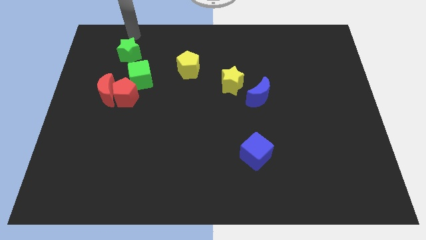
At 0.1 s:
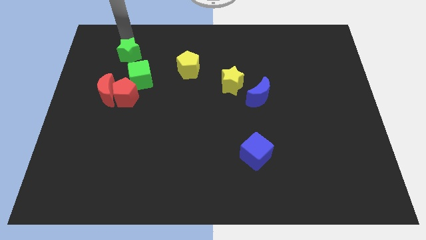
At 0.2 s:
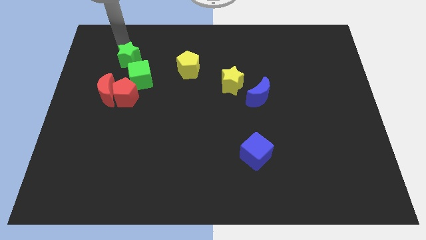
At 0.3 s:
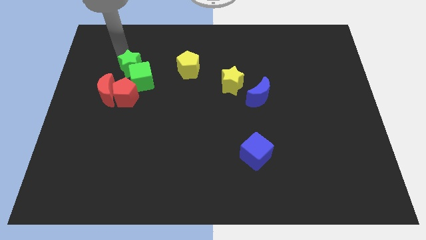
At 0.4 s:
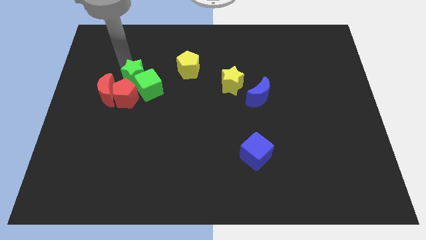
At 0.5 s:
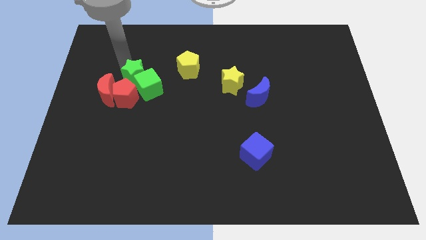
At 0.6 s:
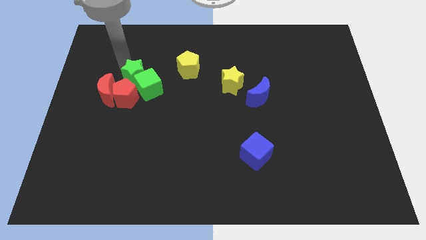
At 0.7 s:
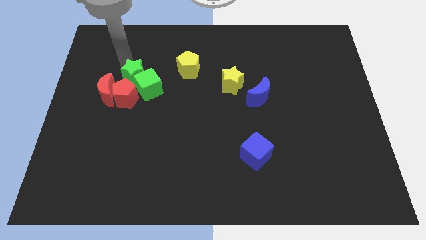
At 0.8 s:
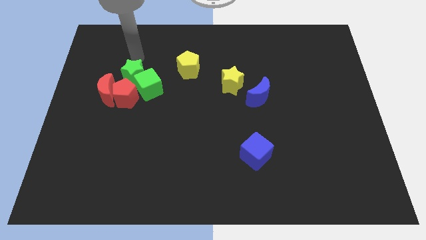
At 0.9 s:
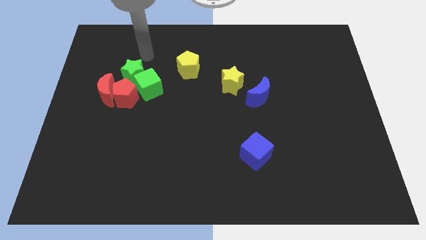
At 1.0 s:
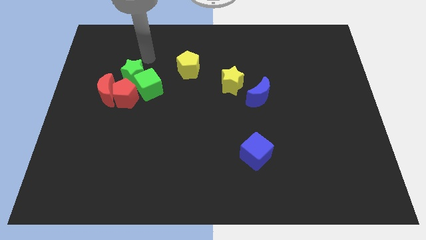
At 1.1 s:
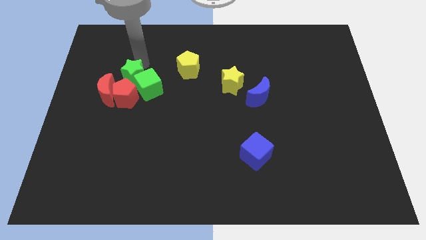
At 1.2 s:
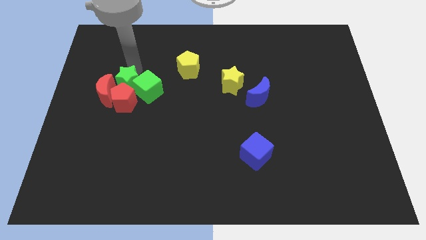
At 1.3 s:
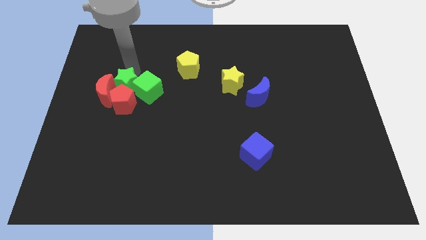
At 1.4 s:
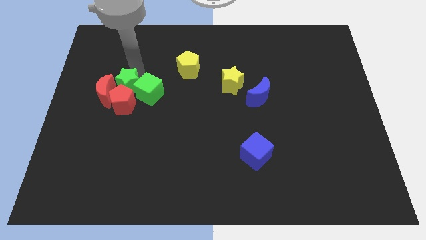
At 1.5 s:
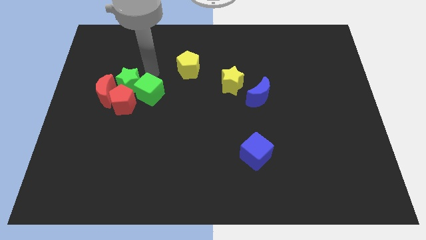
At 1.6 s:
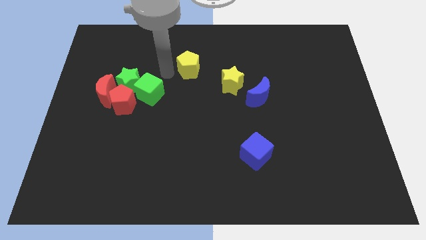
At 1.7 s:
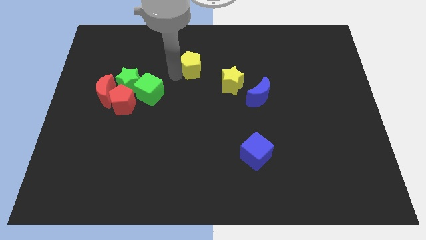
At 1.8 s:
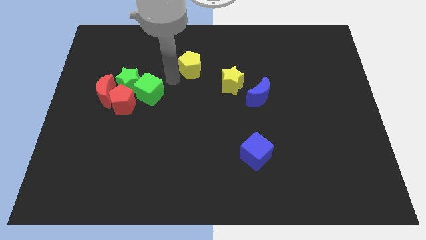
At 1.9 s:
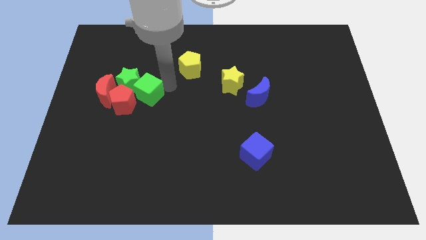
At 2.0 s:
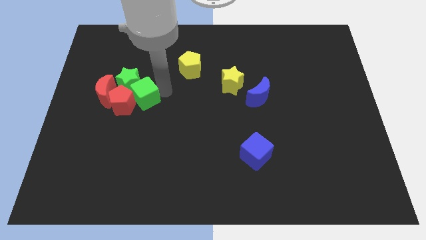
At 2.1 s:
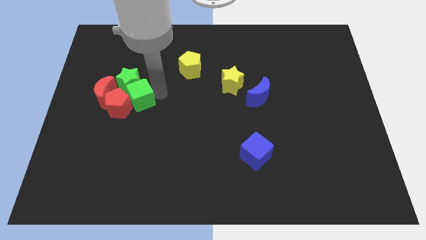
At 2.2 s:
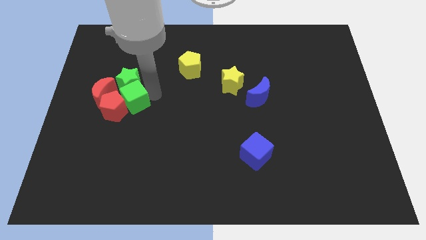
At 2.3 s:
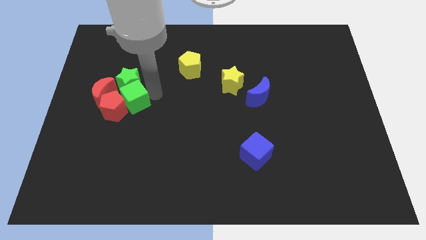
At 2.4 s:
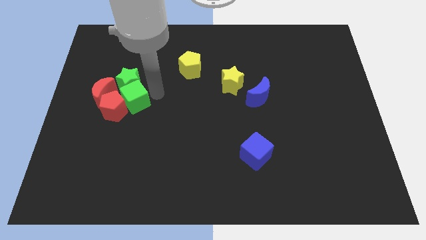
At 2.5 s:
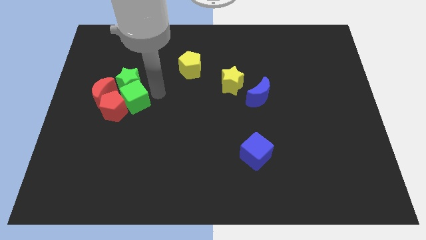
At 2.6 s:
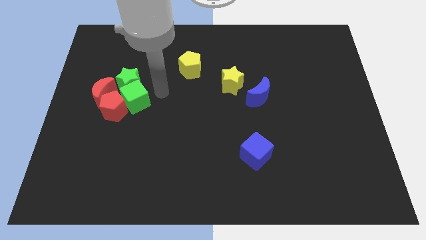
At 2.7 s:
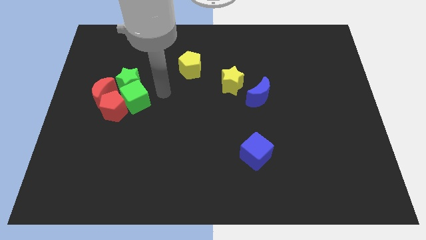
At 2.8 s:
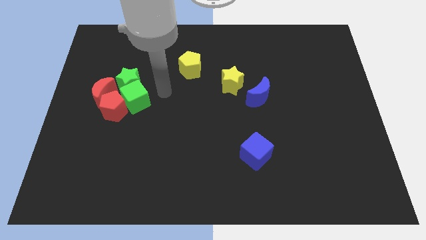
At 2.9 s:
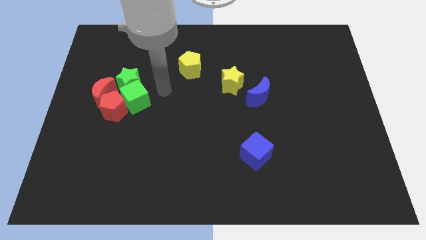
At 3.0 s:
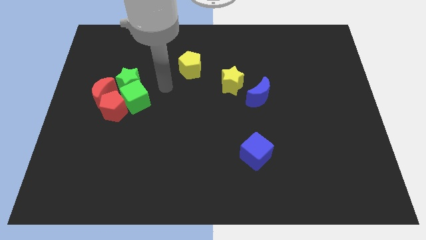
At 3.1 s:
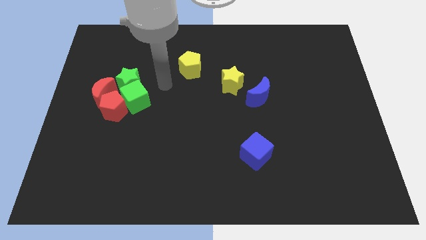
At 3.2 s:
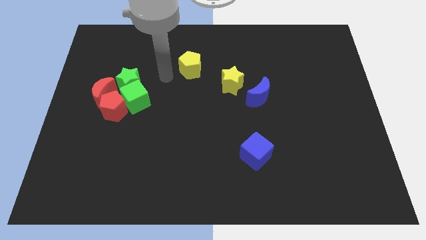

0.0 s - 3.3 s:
make green and red blocks together

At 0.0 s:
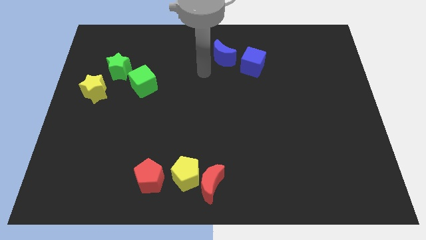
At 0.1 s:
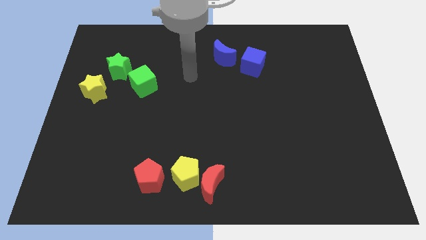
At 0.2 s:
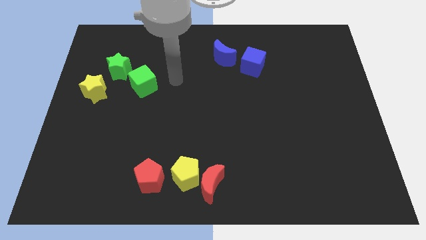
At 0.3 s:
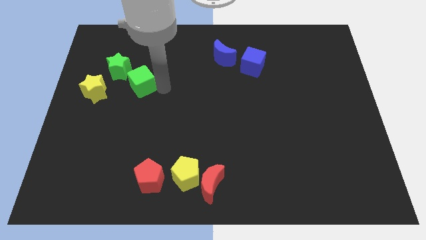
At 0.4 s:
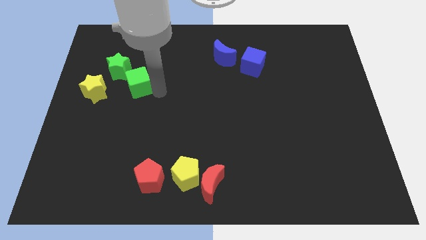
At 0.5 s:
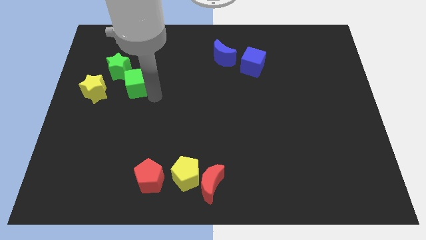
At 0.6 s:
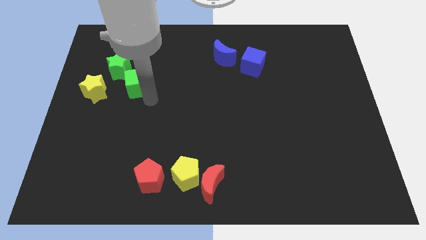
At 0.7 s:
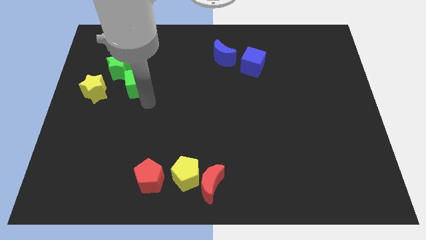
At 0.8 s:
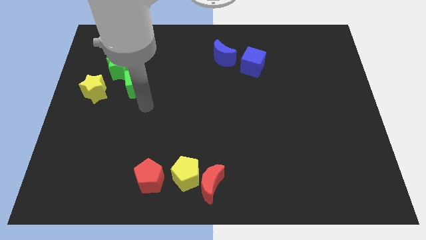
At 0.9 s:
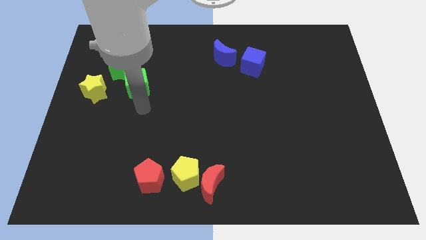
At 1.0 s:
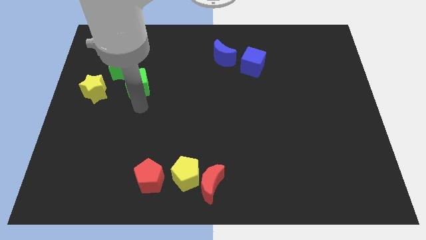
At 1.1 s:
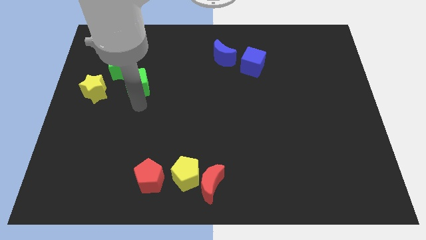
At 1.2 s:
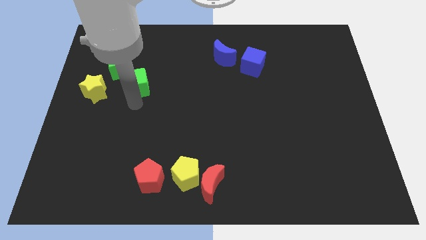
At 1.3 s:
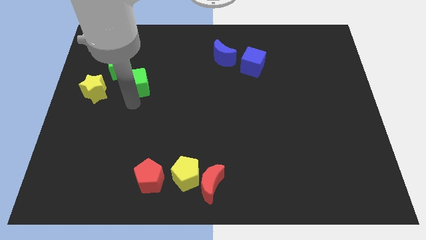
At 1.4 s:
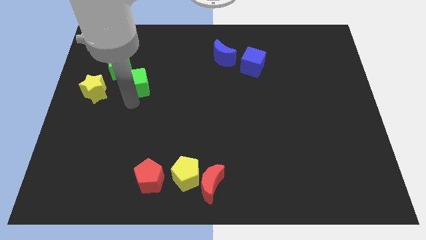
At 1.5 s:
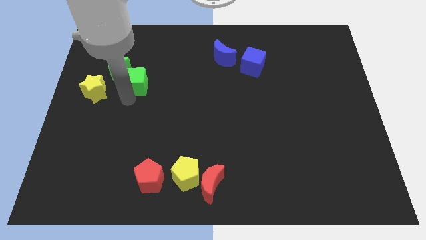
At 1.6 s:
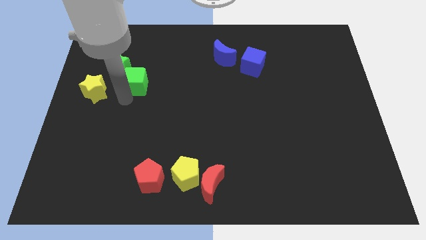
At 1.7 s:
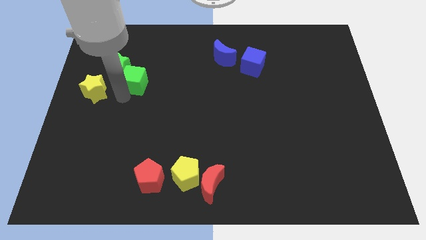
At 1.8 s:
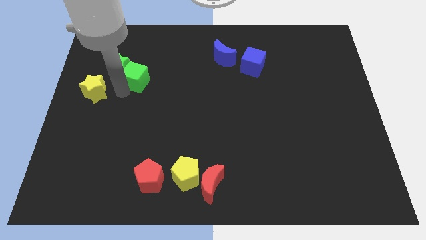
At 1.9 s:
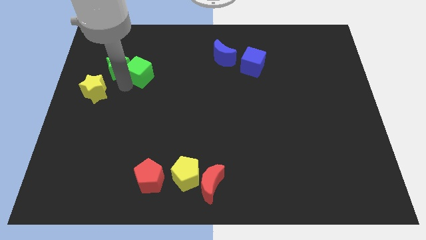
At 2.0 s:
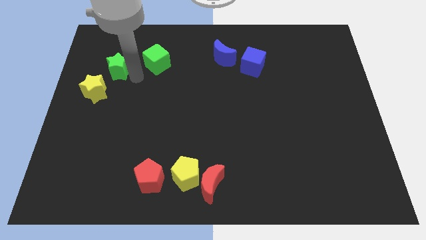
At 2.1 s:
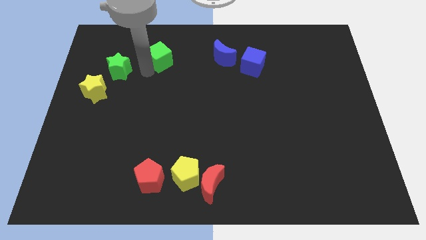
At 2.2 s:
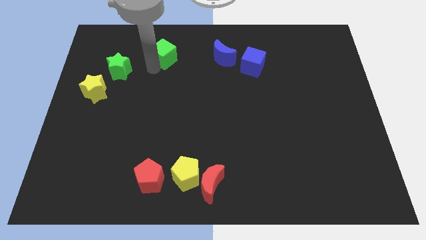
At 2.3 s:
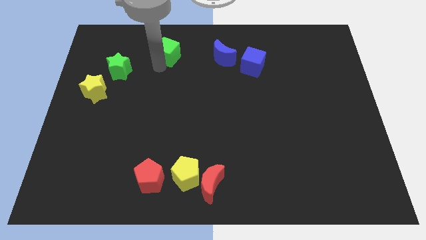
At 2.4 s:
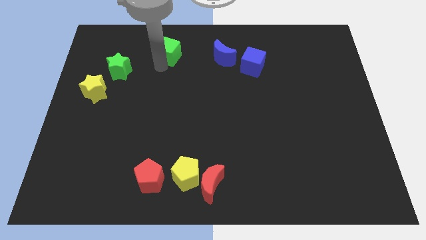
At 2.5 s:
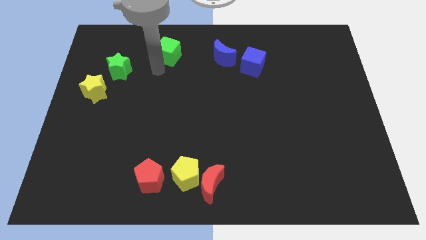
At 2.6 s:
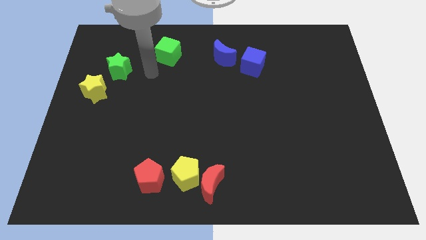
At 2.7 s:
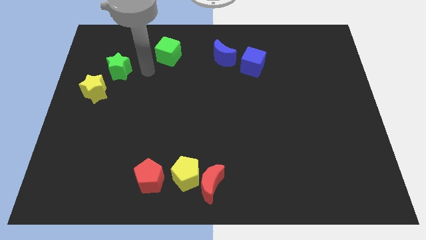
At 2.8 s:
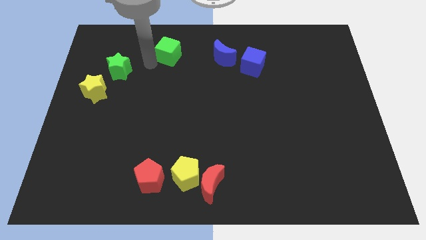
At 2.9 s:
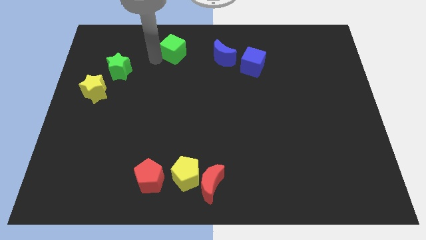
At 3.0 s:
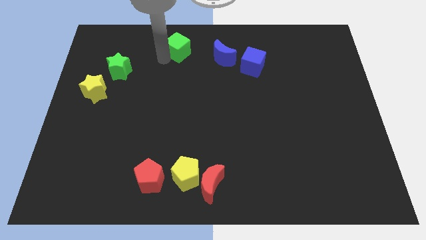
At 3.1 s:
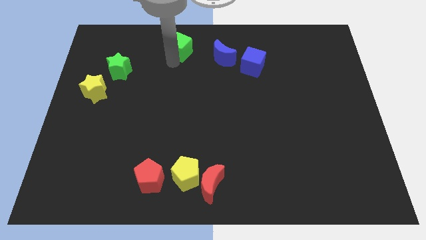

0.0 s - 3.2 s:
move the green cube diagonally left of the blue crescent

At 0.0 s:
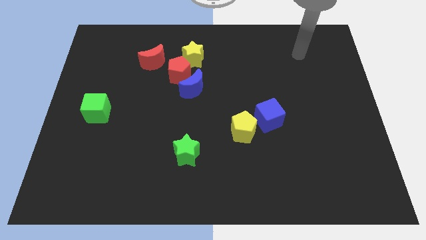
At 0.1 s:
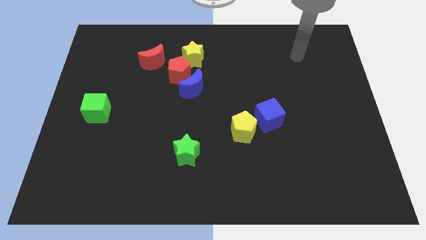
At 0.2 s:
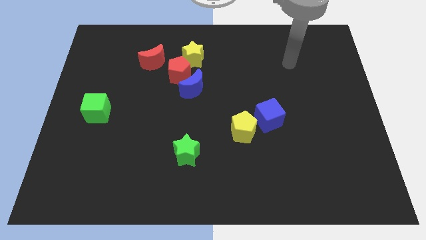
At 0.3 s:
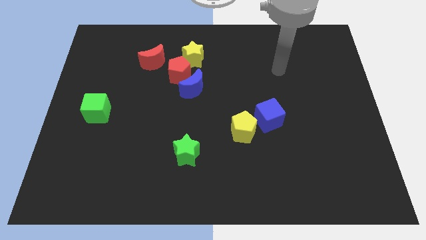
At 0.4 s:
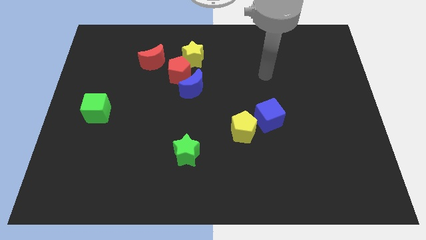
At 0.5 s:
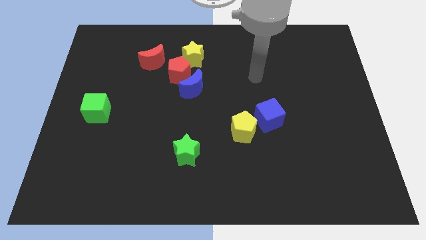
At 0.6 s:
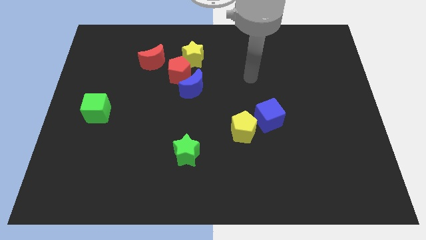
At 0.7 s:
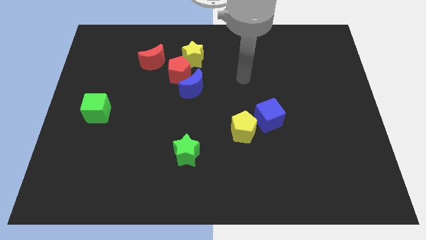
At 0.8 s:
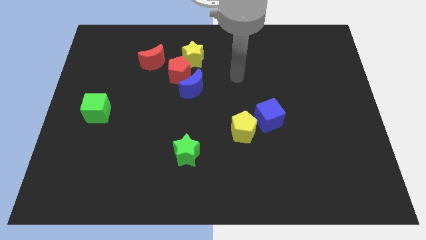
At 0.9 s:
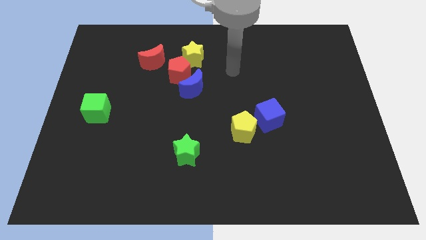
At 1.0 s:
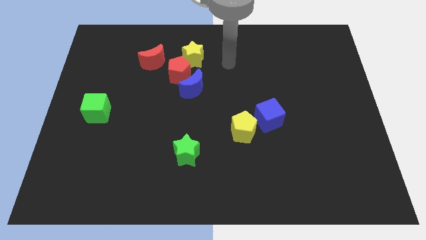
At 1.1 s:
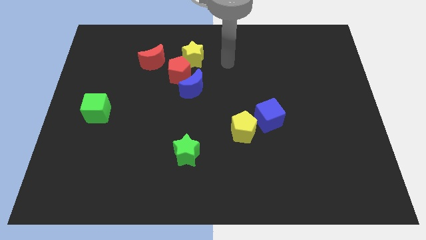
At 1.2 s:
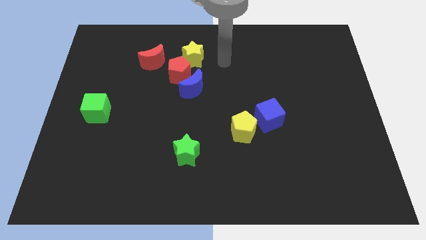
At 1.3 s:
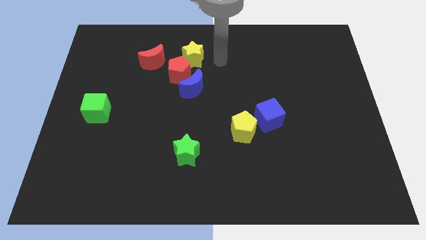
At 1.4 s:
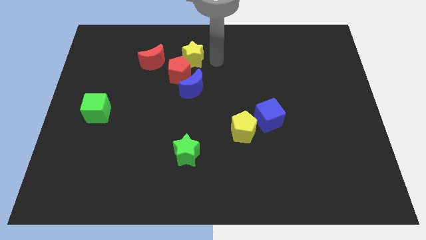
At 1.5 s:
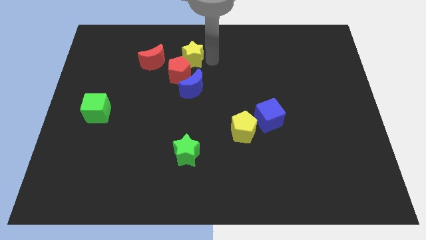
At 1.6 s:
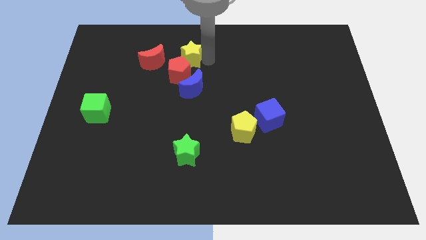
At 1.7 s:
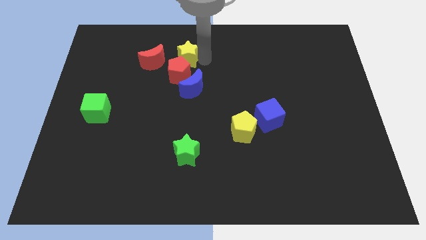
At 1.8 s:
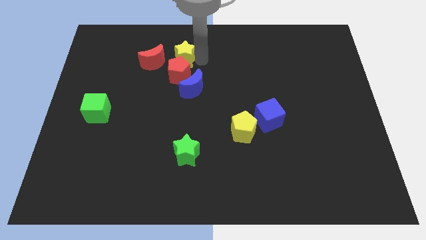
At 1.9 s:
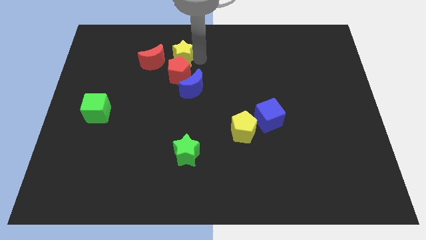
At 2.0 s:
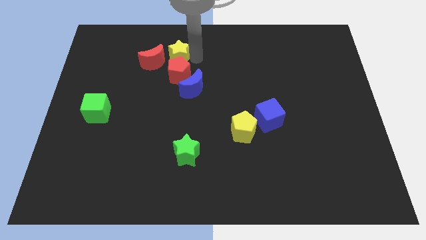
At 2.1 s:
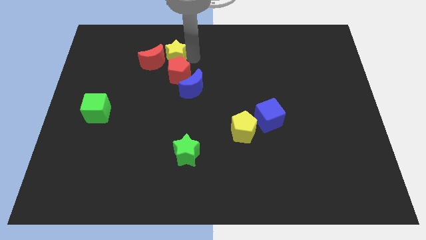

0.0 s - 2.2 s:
touch the yellow star with your arm

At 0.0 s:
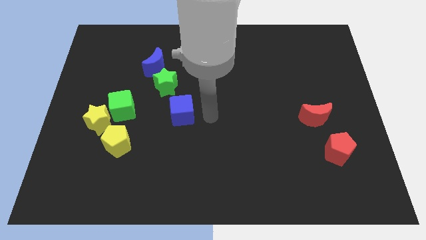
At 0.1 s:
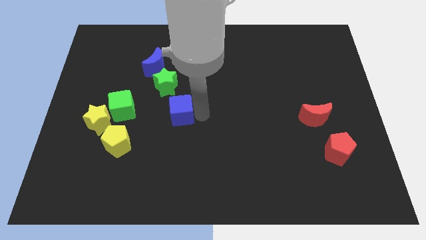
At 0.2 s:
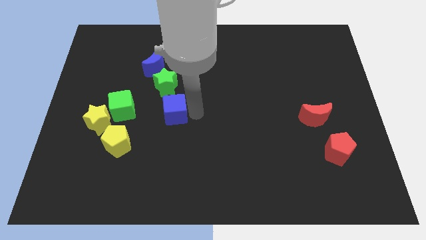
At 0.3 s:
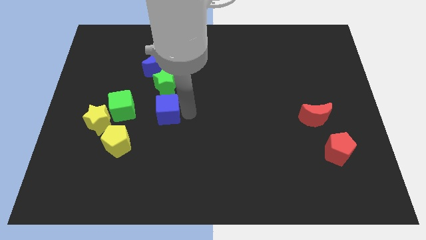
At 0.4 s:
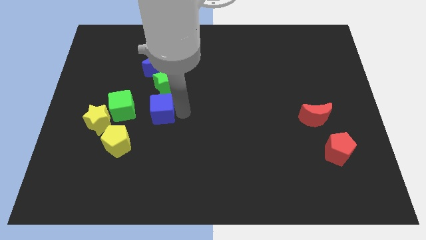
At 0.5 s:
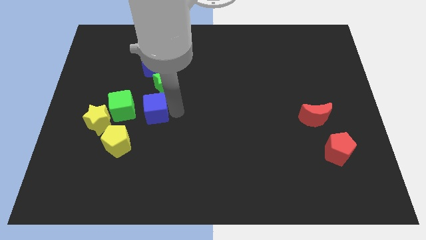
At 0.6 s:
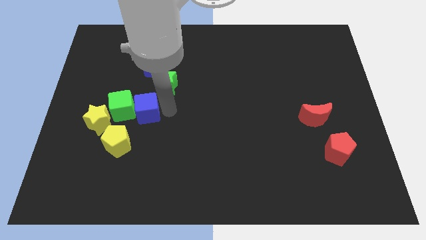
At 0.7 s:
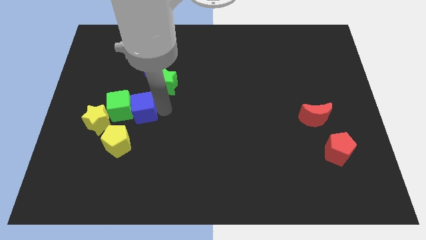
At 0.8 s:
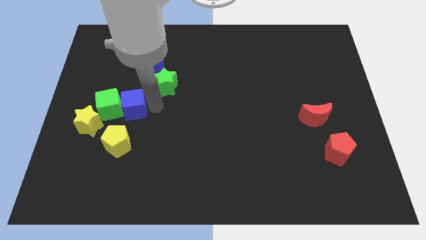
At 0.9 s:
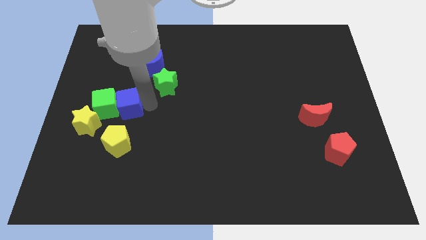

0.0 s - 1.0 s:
place blue cube to the bottom left of green star
